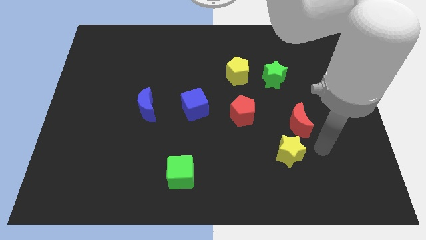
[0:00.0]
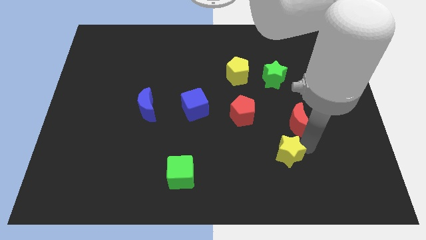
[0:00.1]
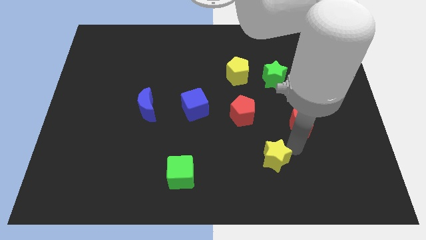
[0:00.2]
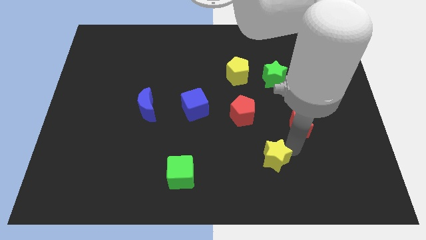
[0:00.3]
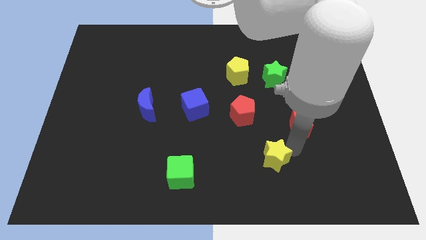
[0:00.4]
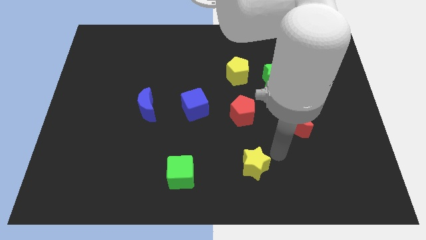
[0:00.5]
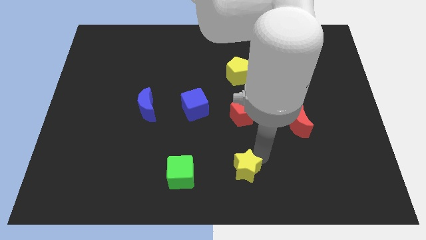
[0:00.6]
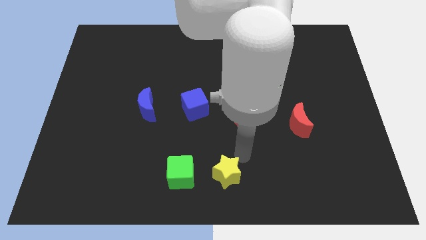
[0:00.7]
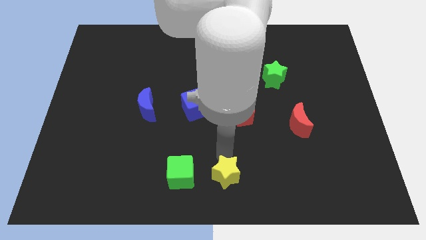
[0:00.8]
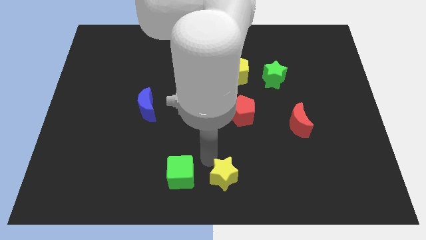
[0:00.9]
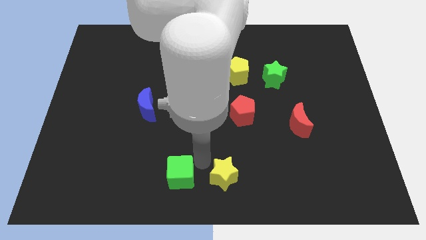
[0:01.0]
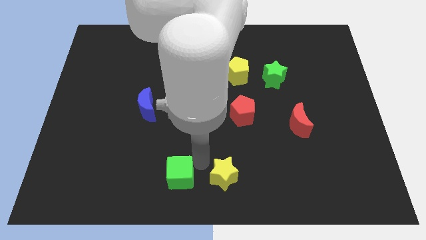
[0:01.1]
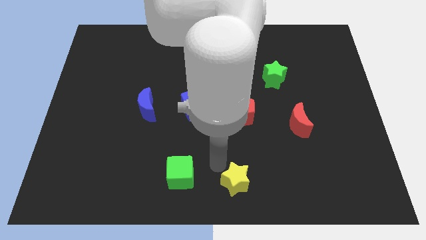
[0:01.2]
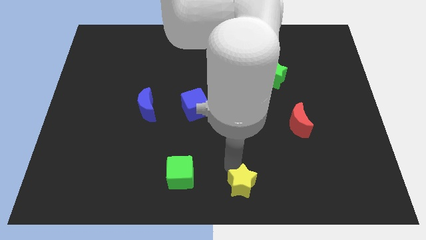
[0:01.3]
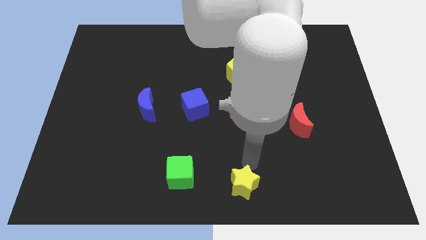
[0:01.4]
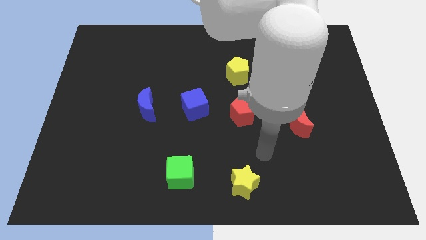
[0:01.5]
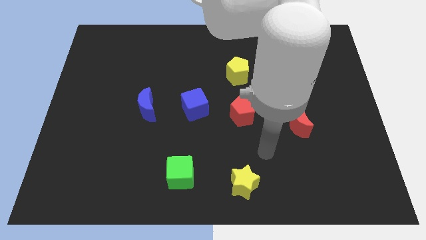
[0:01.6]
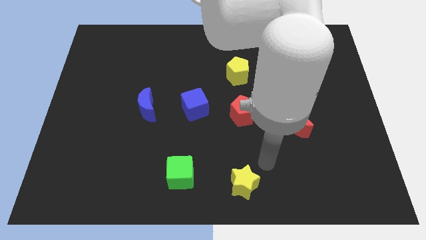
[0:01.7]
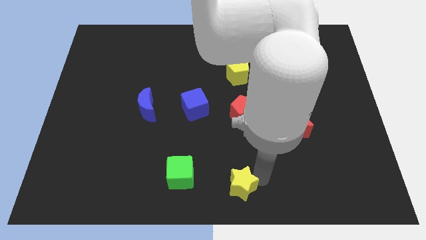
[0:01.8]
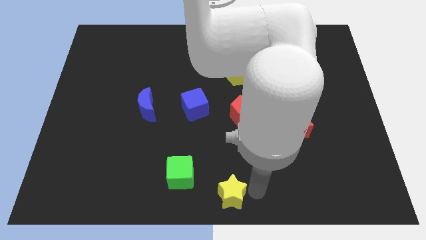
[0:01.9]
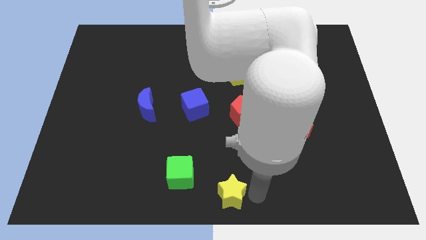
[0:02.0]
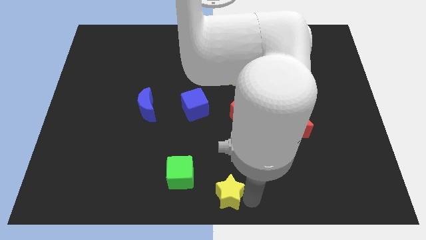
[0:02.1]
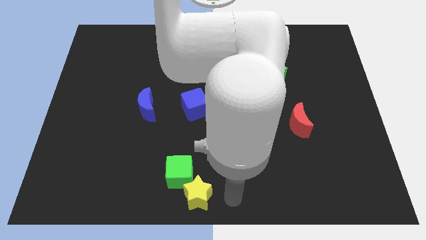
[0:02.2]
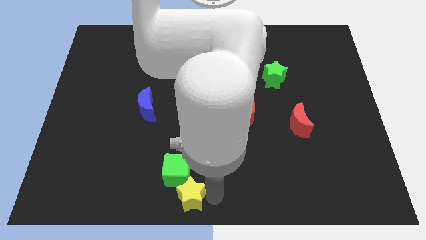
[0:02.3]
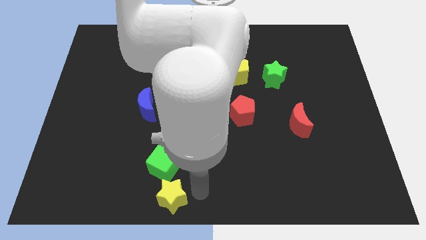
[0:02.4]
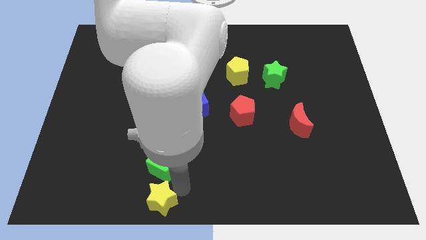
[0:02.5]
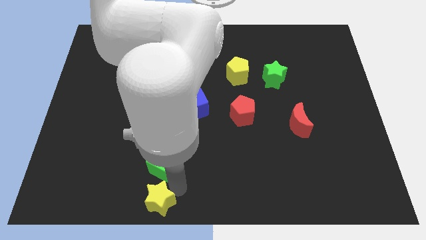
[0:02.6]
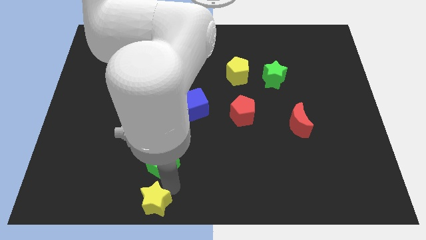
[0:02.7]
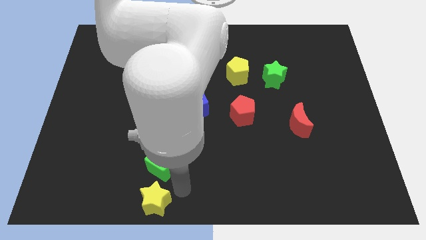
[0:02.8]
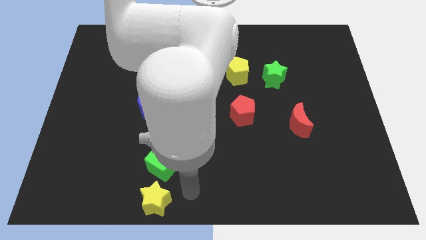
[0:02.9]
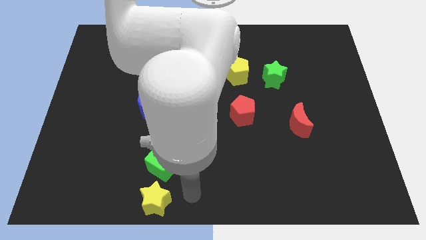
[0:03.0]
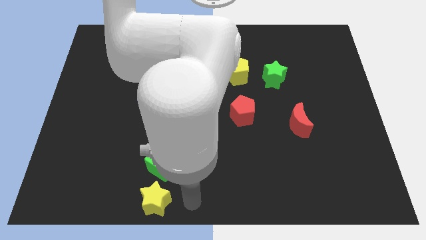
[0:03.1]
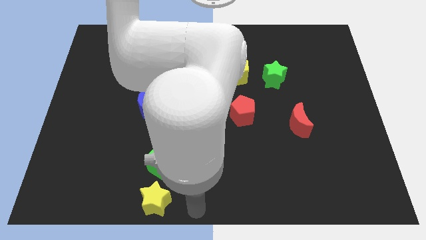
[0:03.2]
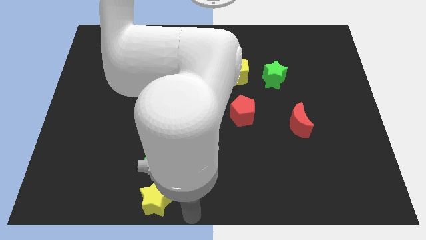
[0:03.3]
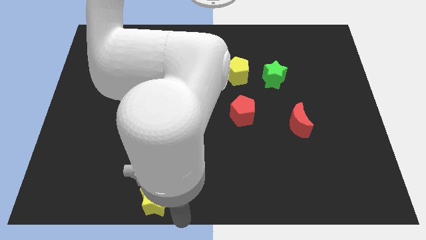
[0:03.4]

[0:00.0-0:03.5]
place the yellow star below the green cube

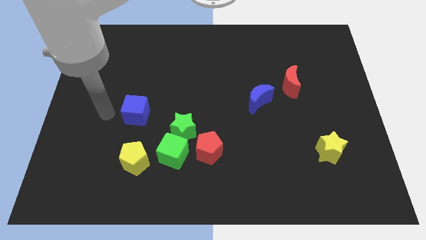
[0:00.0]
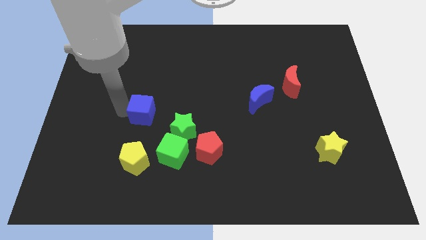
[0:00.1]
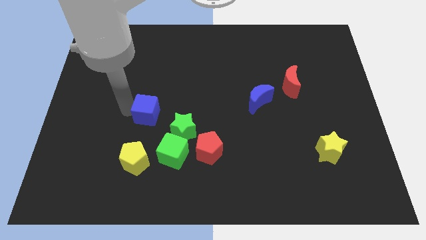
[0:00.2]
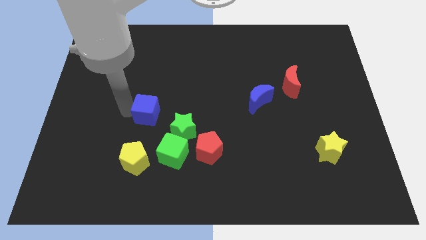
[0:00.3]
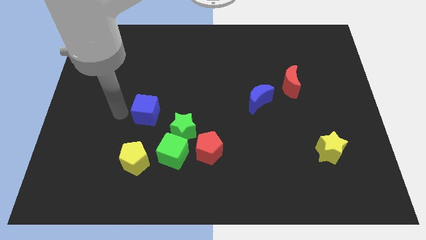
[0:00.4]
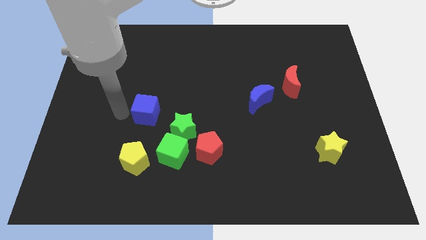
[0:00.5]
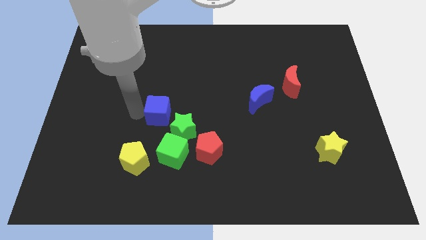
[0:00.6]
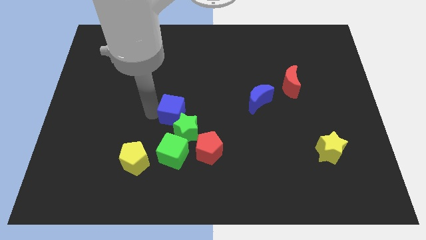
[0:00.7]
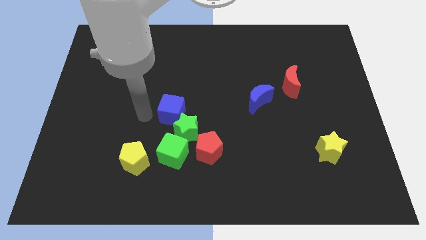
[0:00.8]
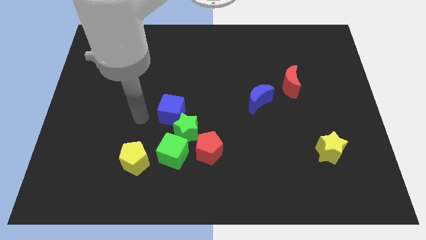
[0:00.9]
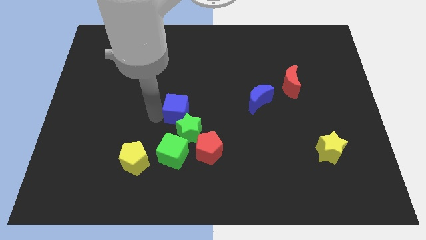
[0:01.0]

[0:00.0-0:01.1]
push blue cube into the green star

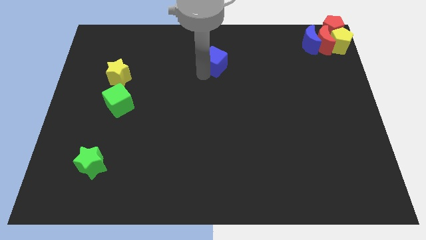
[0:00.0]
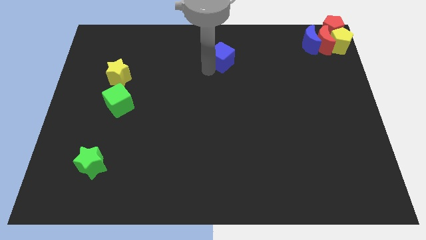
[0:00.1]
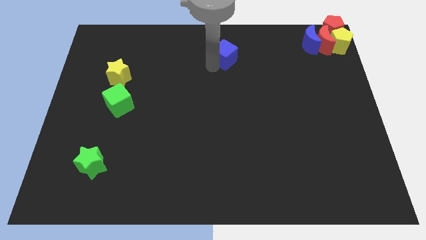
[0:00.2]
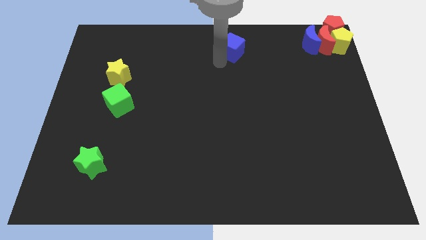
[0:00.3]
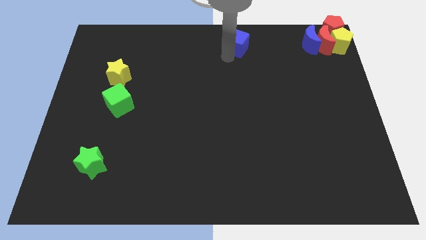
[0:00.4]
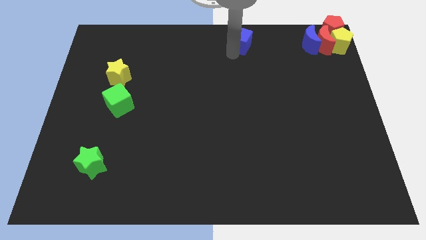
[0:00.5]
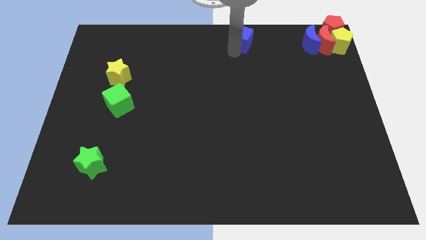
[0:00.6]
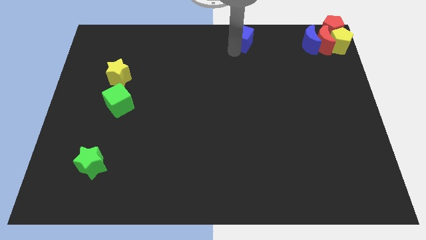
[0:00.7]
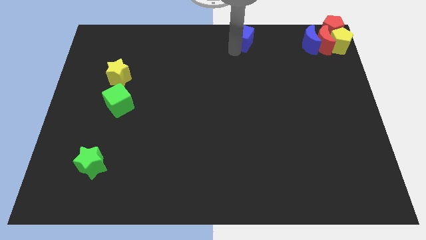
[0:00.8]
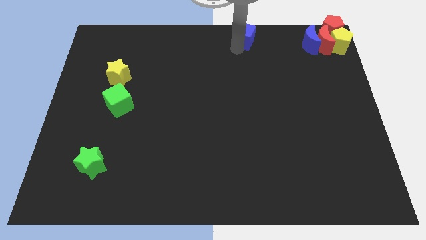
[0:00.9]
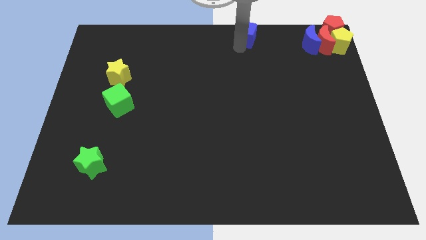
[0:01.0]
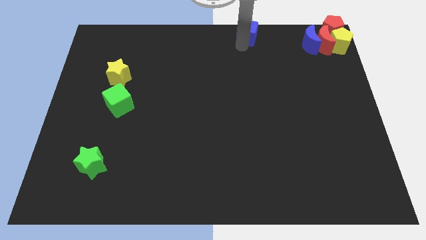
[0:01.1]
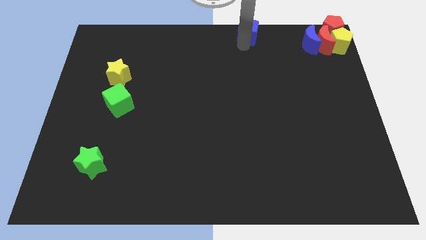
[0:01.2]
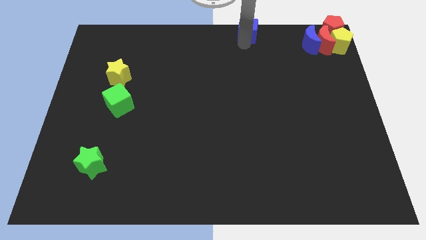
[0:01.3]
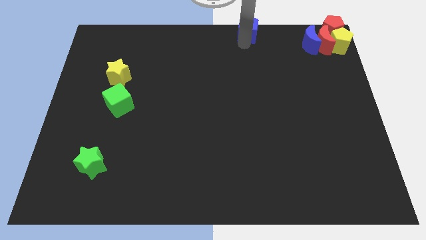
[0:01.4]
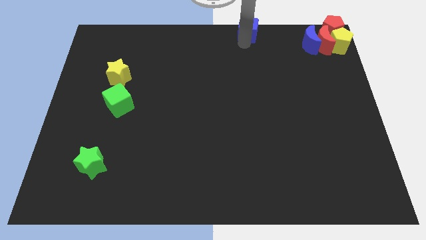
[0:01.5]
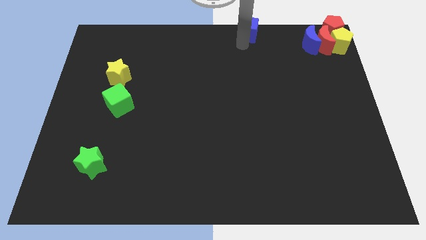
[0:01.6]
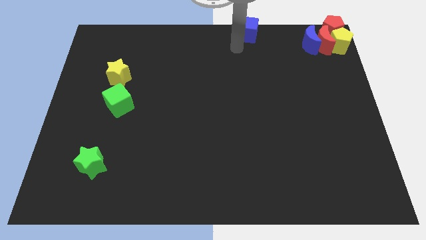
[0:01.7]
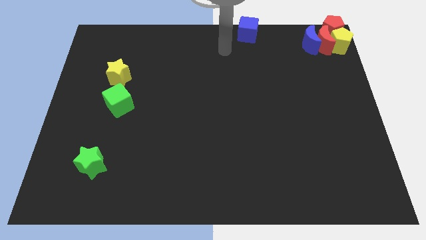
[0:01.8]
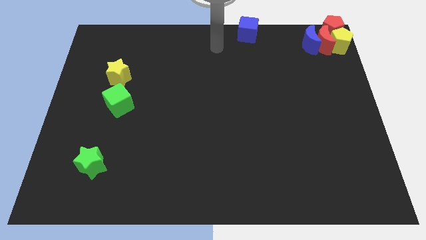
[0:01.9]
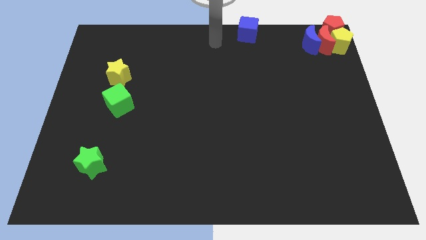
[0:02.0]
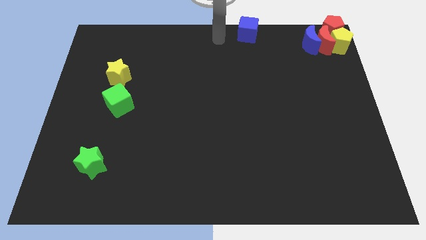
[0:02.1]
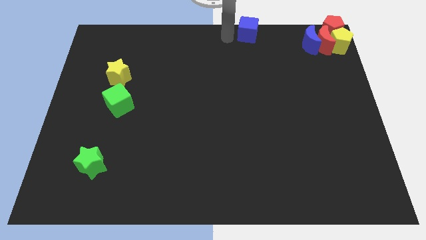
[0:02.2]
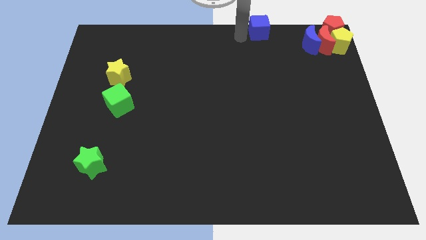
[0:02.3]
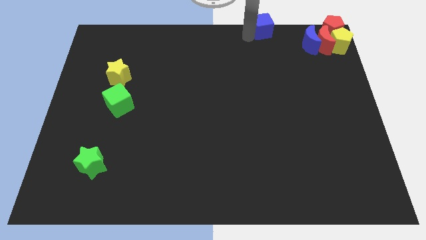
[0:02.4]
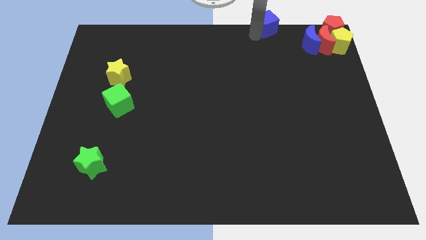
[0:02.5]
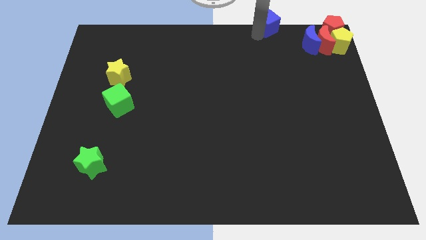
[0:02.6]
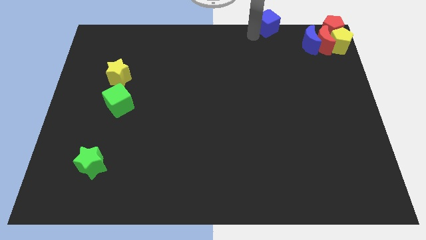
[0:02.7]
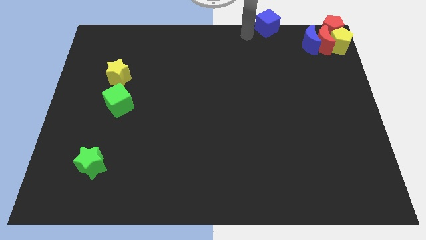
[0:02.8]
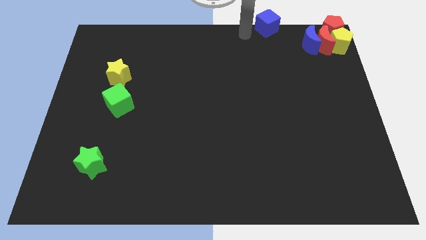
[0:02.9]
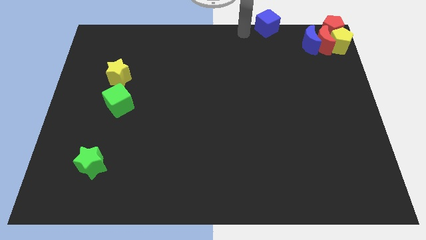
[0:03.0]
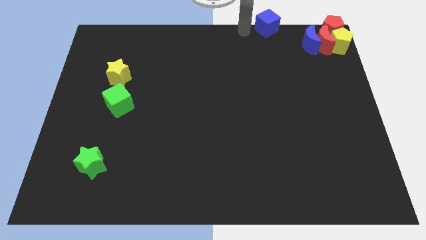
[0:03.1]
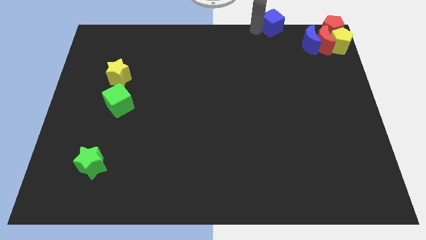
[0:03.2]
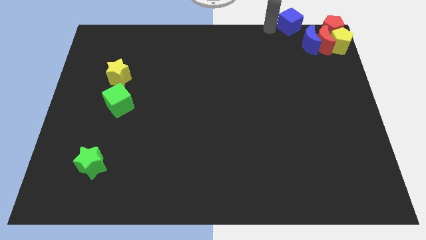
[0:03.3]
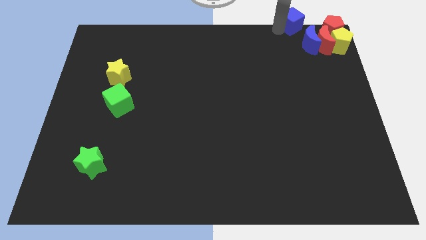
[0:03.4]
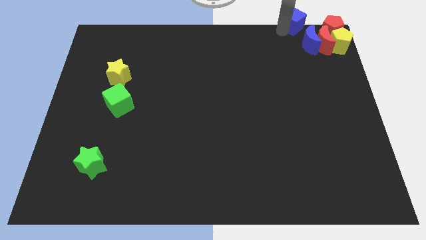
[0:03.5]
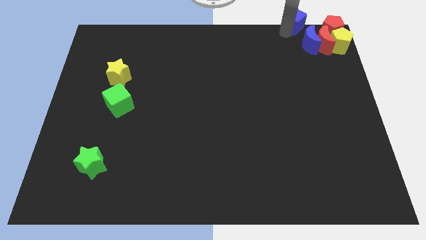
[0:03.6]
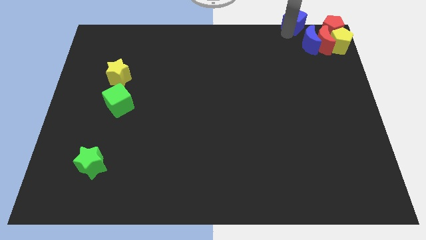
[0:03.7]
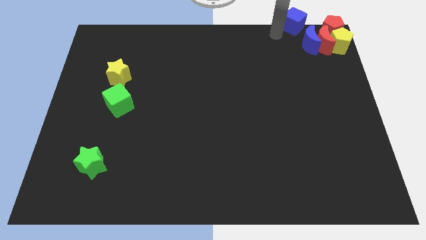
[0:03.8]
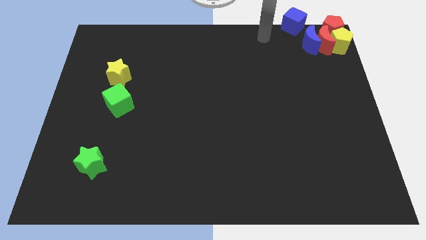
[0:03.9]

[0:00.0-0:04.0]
place the blue cube with group of blocks at the top right corner

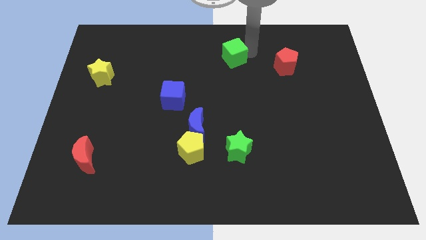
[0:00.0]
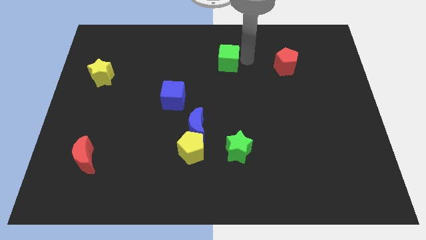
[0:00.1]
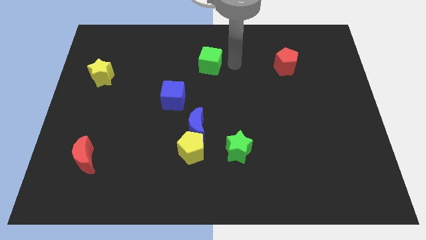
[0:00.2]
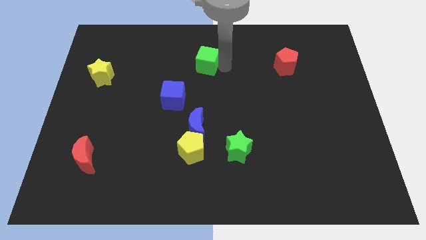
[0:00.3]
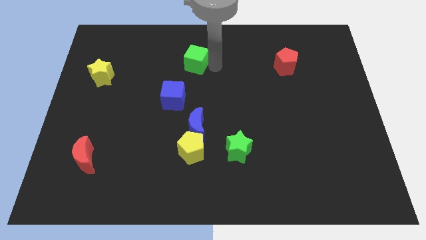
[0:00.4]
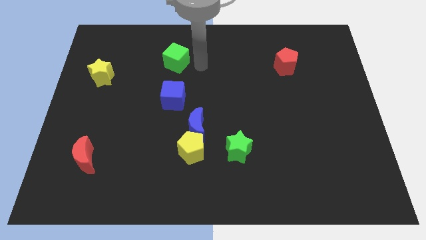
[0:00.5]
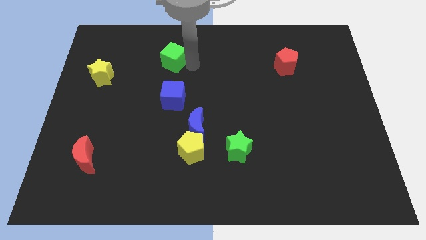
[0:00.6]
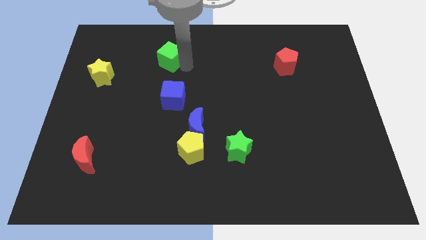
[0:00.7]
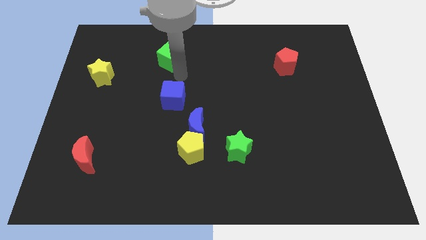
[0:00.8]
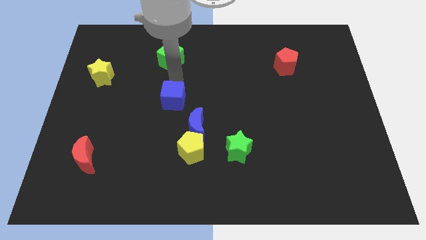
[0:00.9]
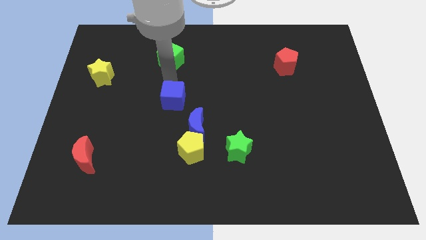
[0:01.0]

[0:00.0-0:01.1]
move the green cube to the top of the blue cube
